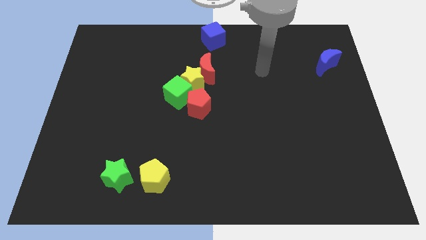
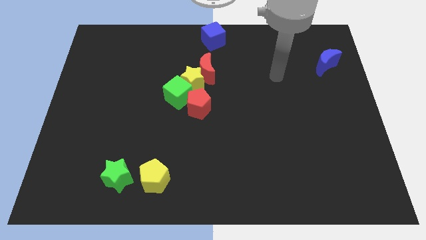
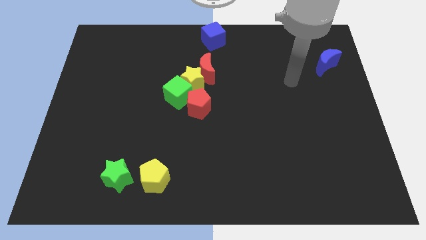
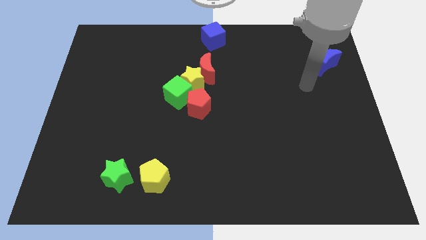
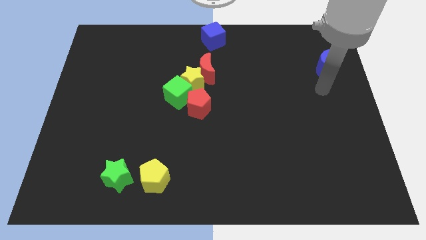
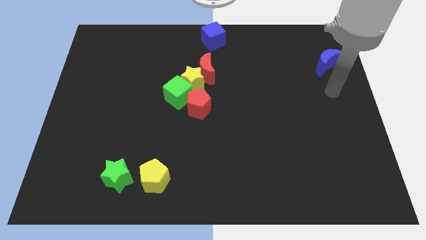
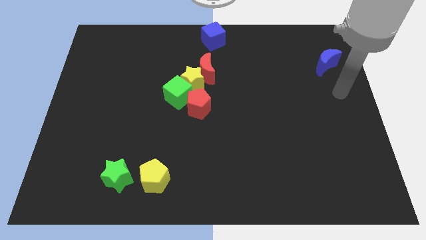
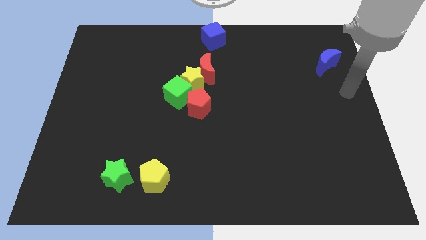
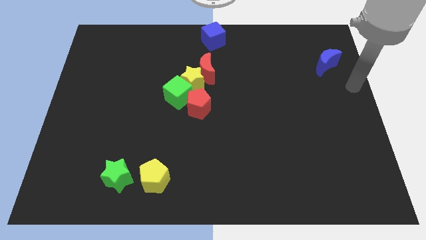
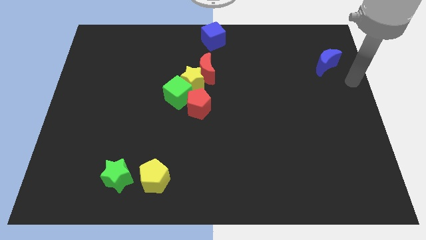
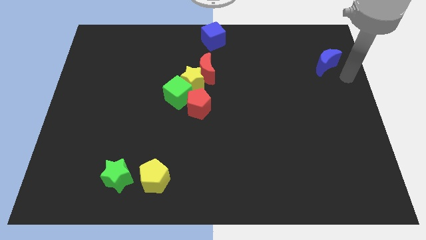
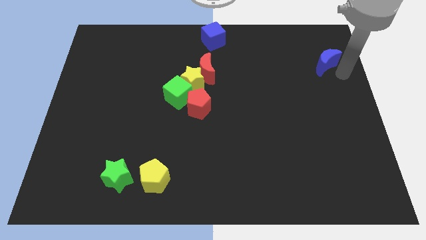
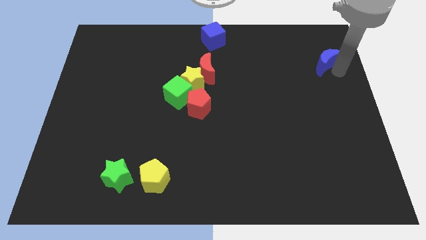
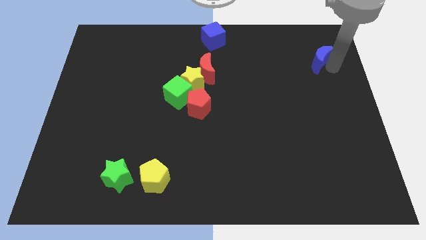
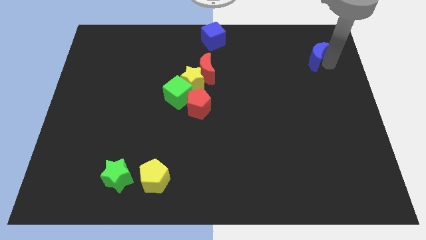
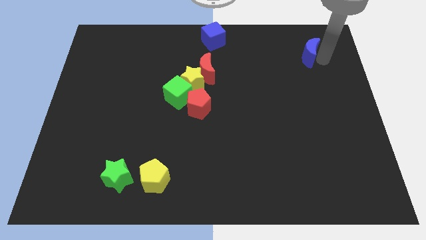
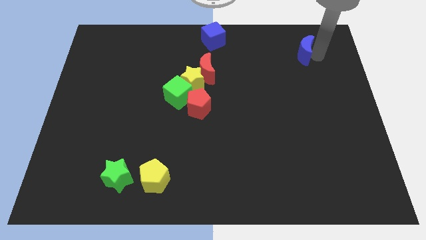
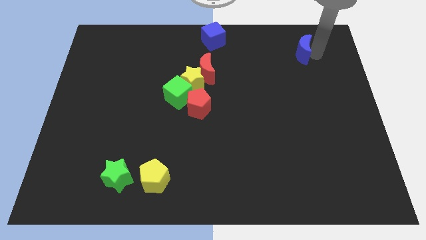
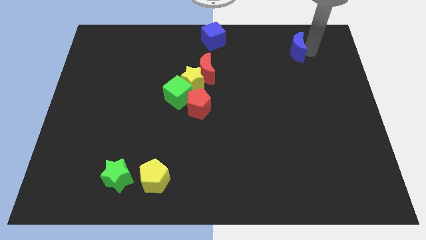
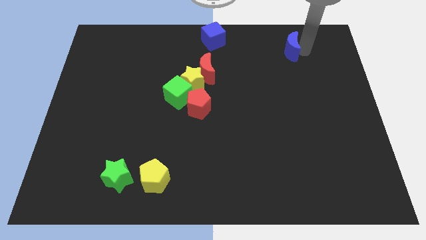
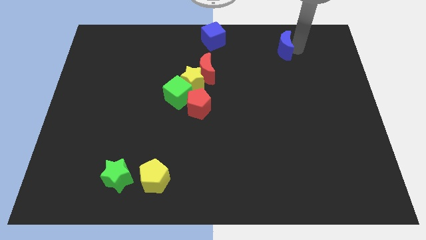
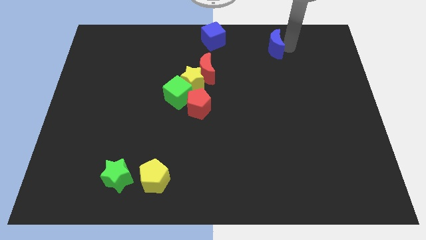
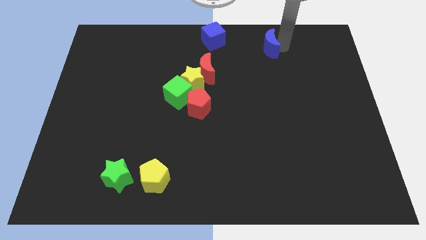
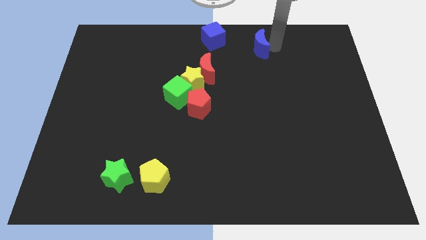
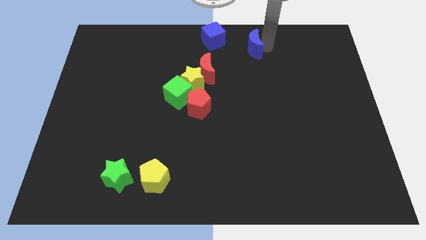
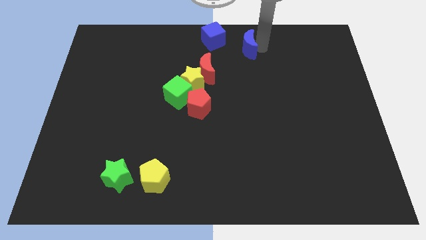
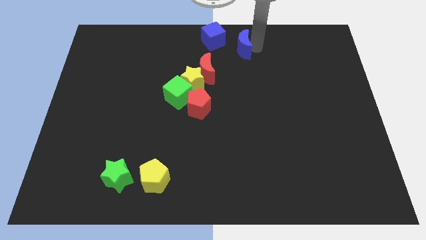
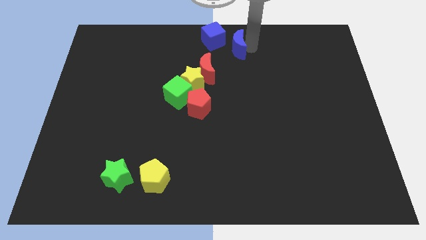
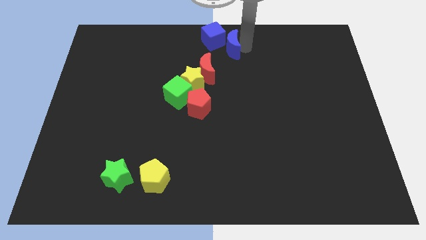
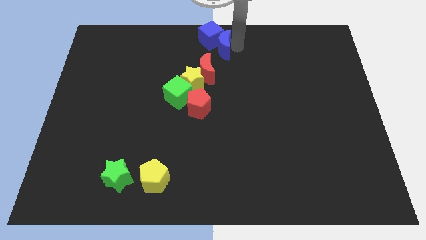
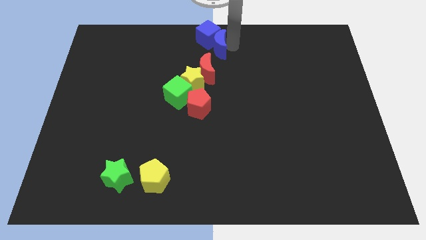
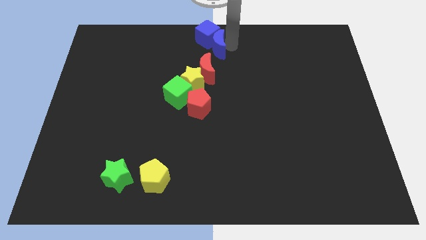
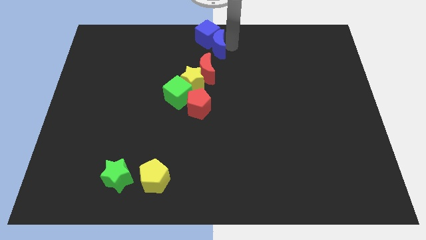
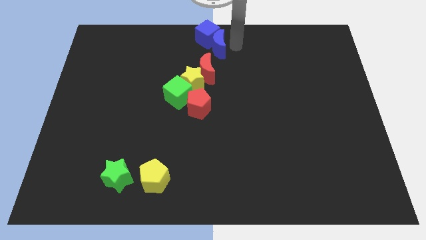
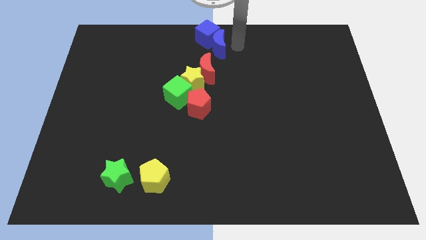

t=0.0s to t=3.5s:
push the blue moon into the blue cube

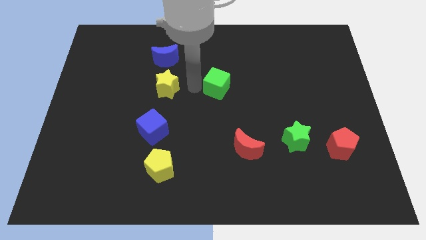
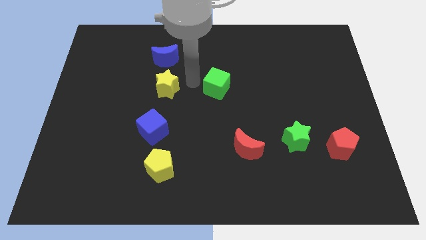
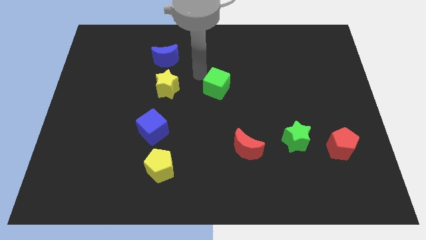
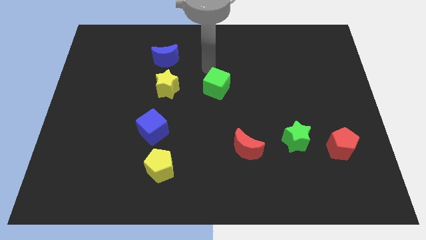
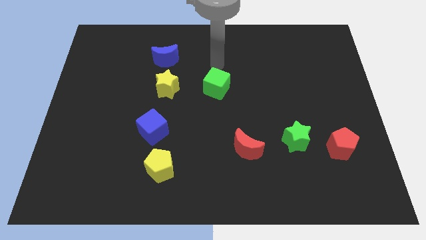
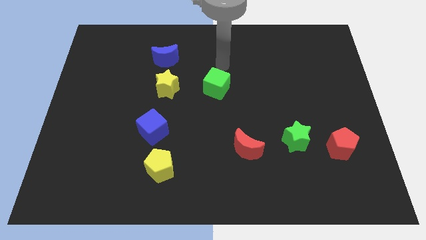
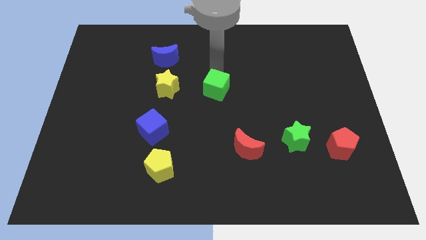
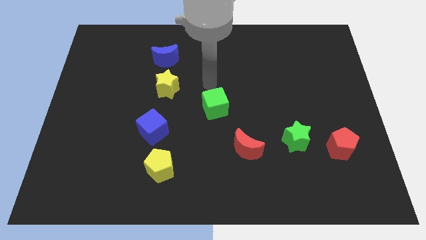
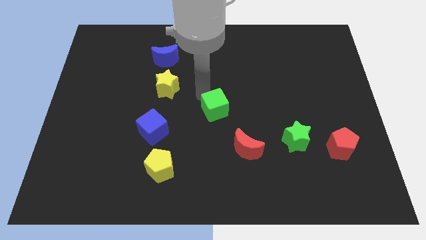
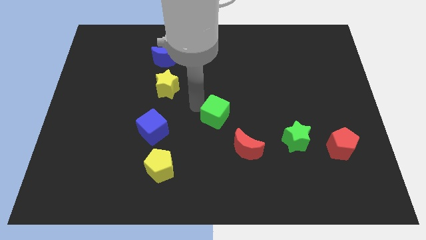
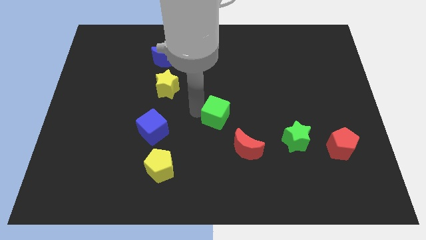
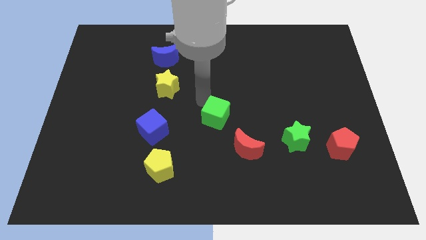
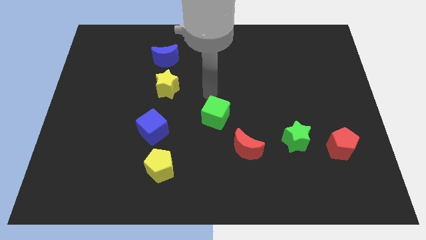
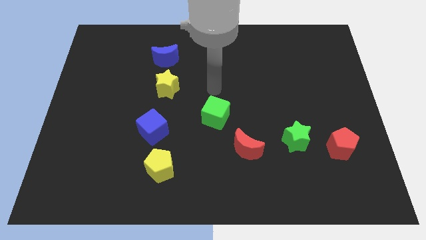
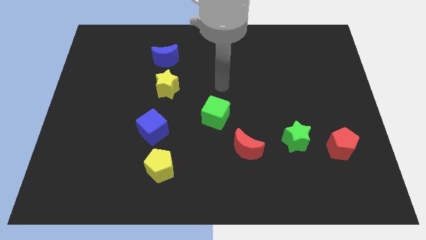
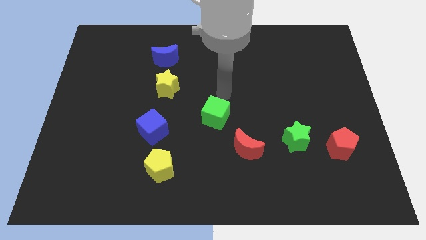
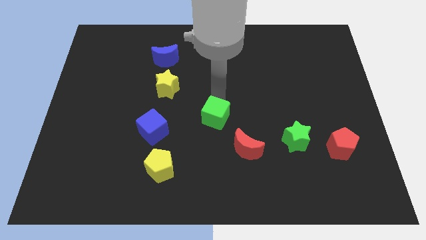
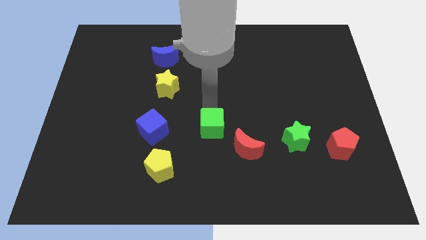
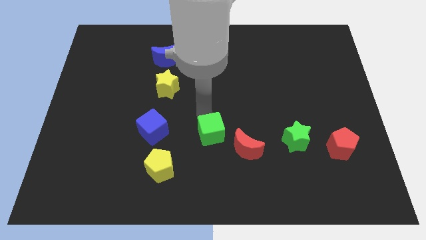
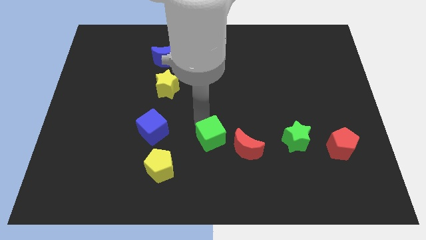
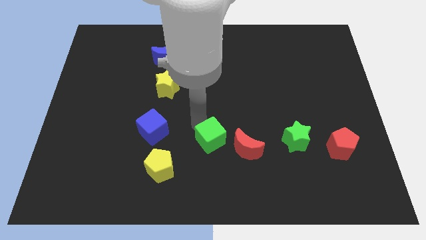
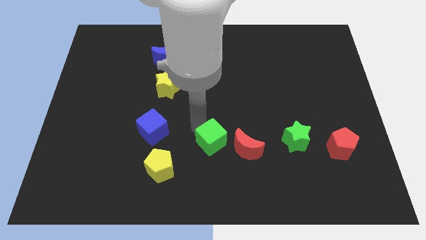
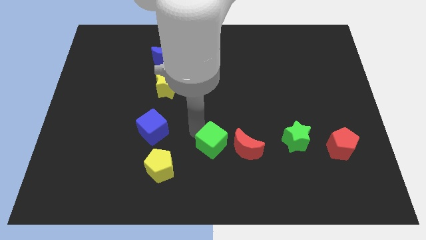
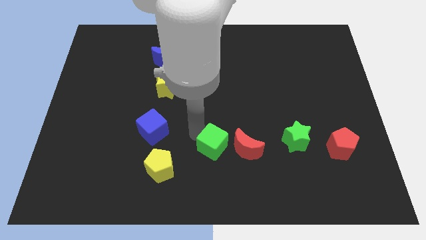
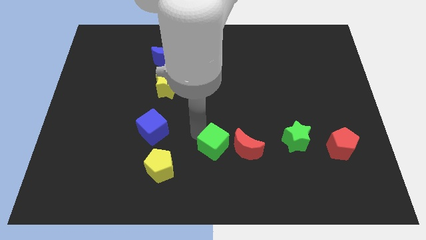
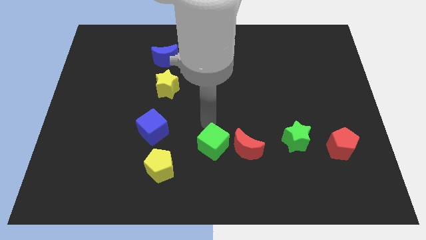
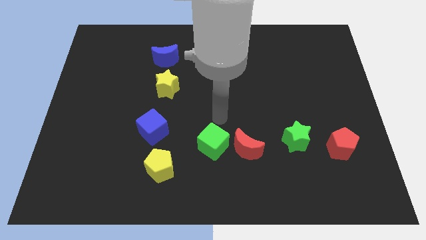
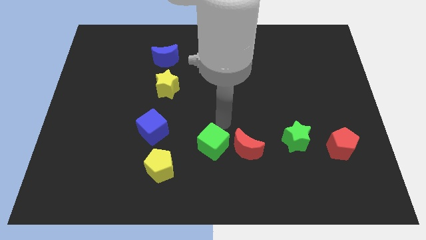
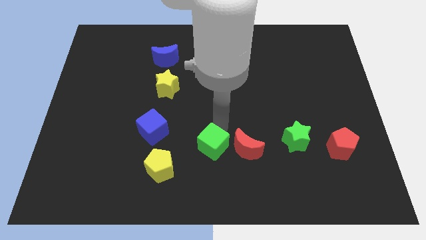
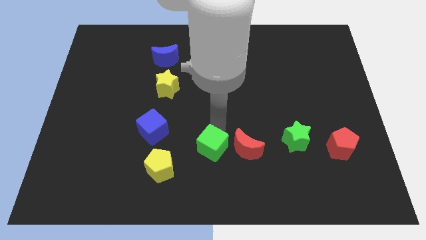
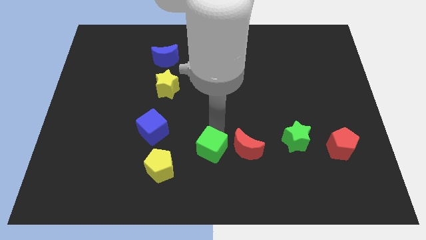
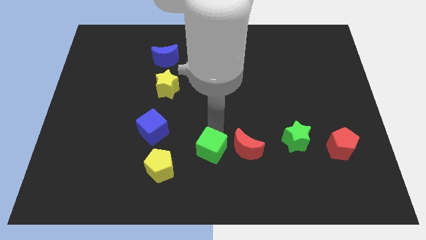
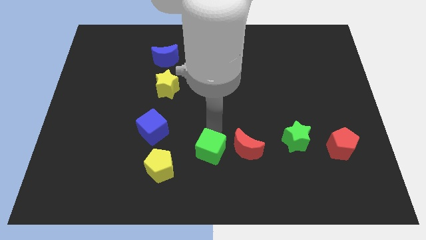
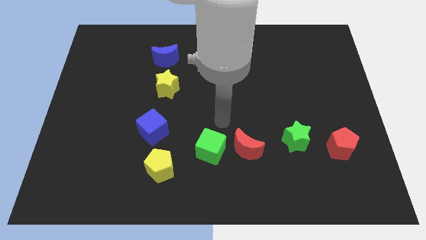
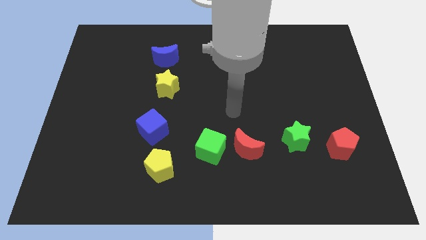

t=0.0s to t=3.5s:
place green cube beside red crescent

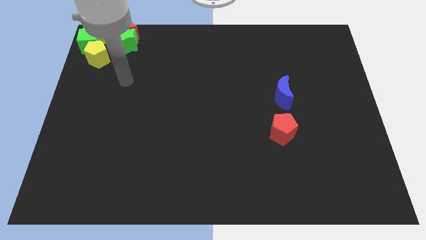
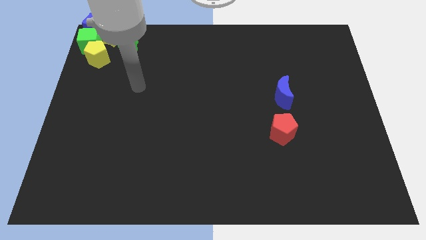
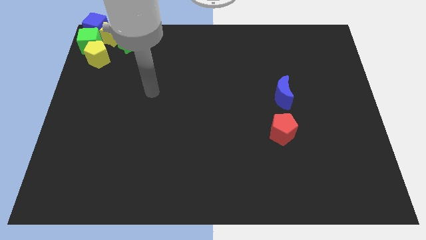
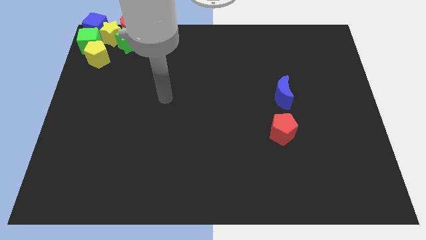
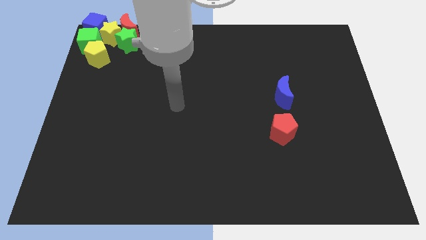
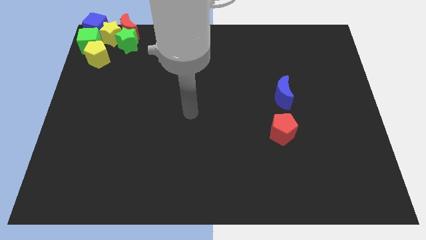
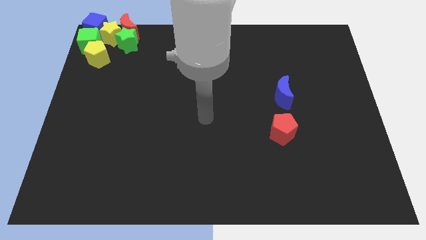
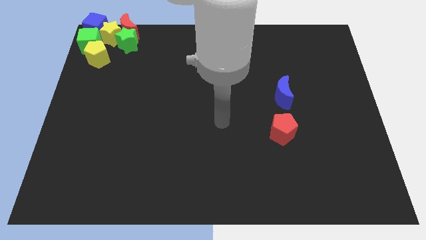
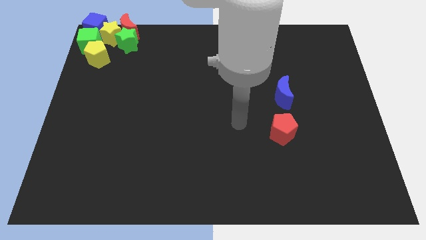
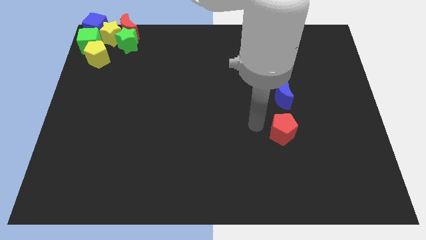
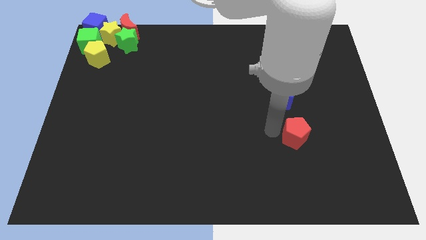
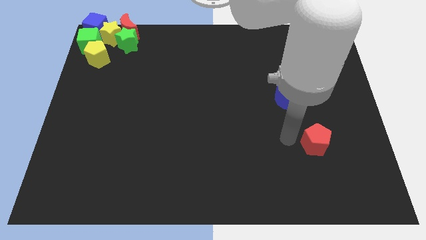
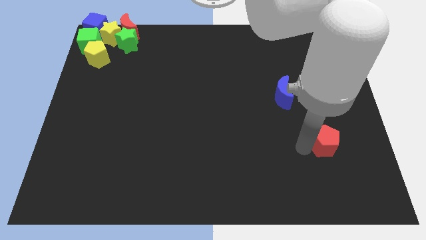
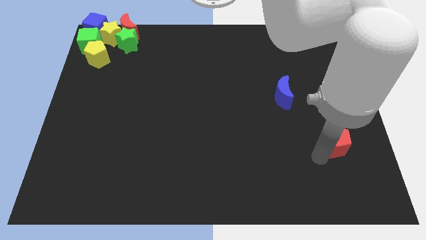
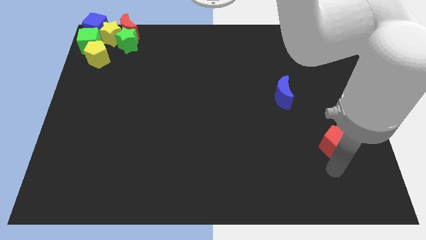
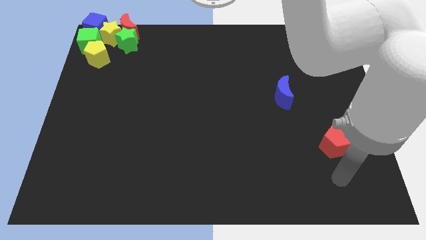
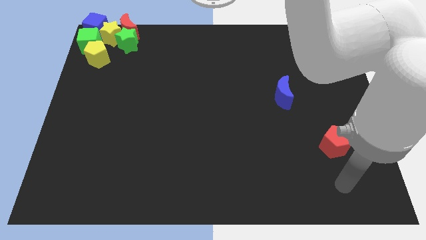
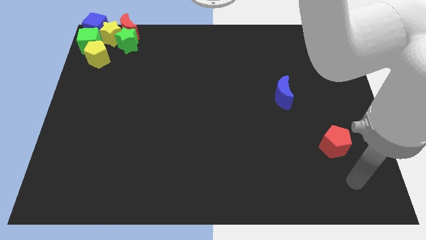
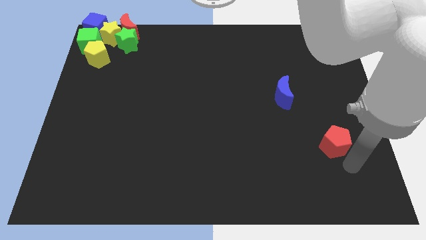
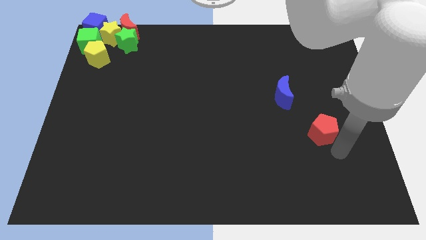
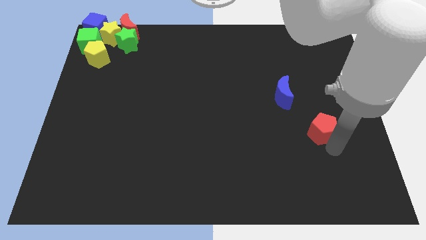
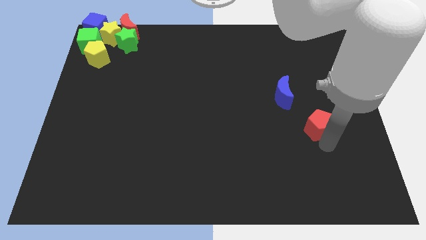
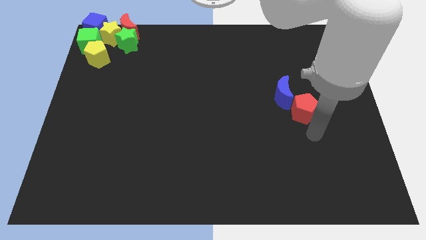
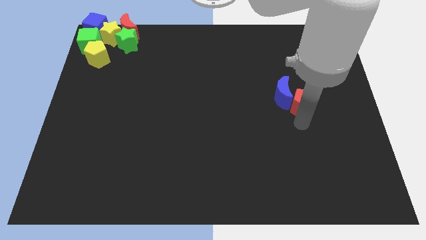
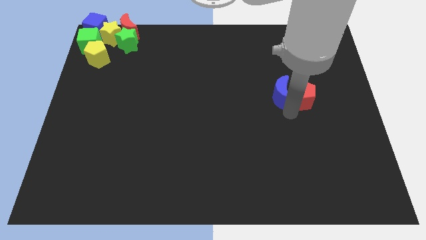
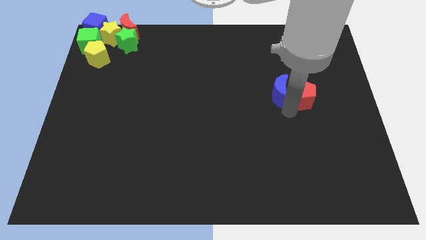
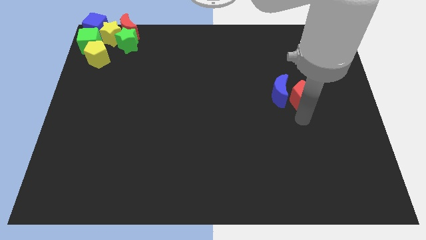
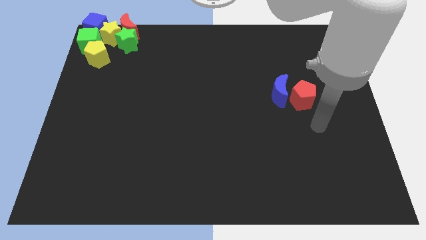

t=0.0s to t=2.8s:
move the red pentagon right side of the blue moon
